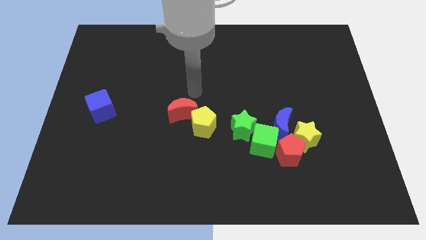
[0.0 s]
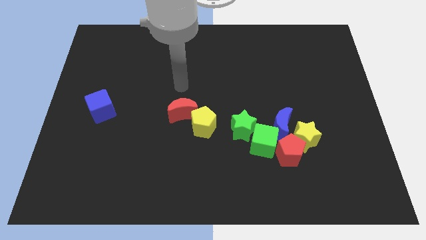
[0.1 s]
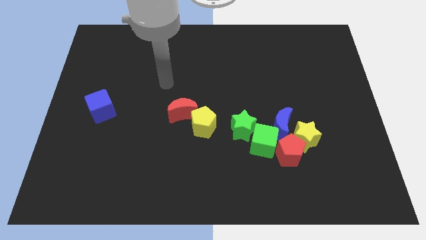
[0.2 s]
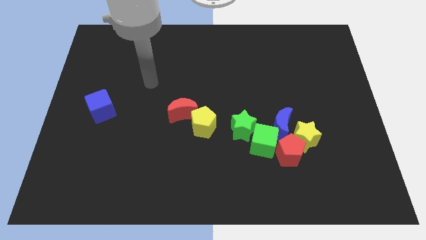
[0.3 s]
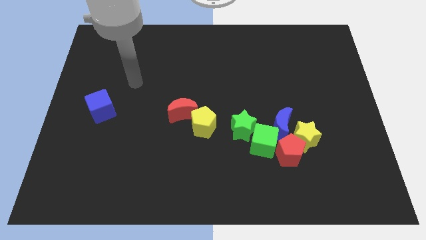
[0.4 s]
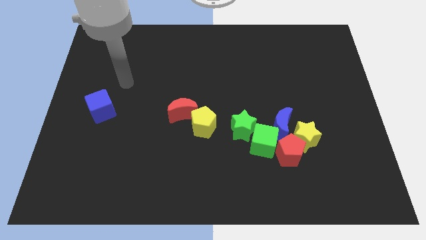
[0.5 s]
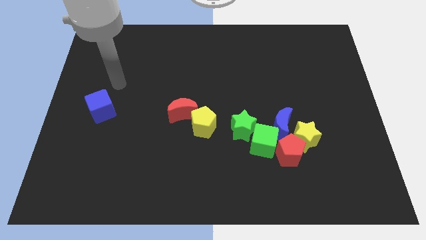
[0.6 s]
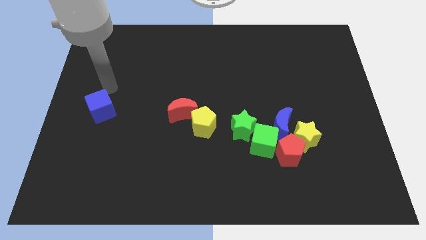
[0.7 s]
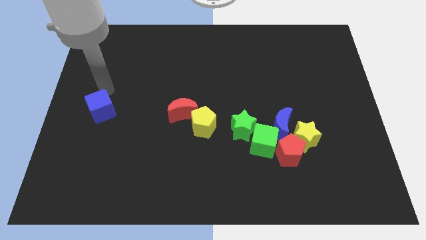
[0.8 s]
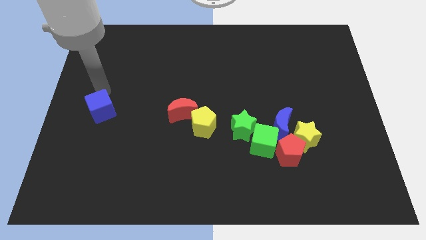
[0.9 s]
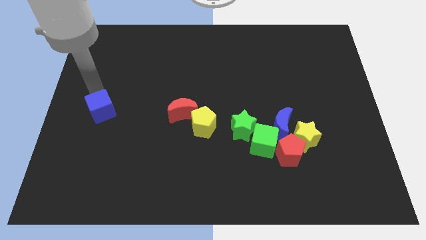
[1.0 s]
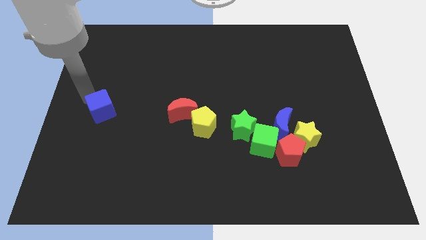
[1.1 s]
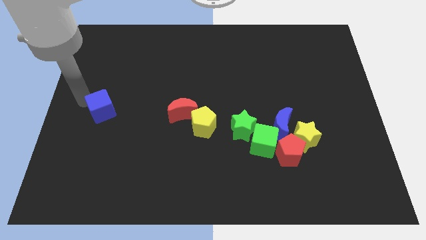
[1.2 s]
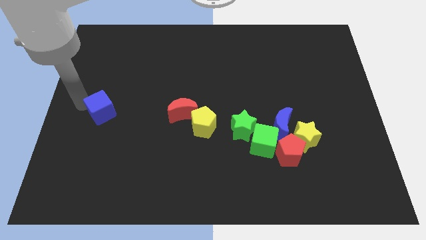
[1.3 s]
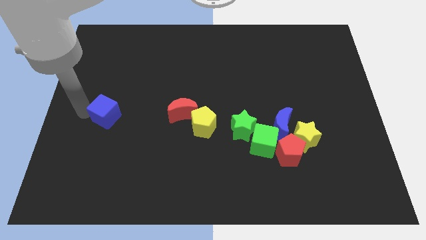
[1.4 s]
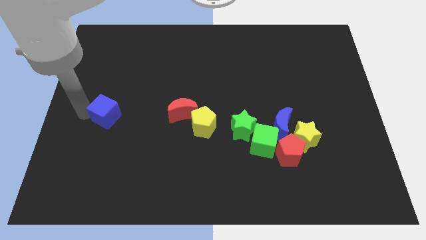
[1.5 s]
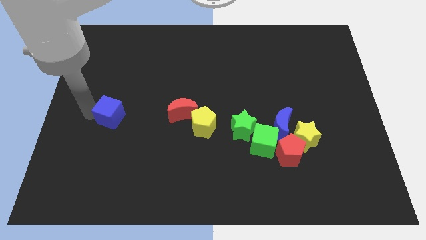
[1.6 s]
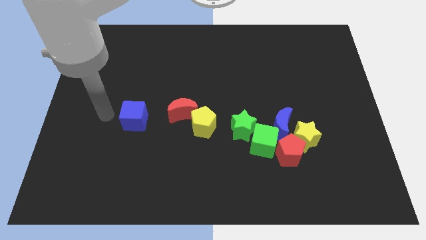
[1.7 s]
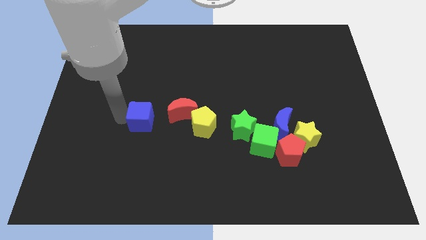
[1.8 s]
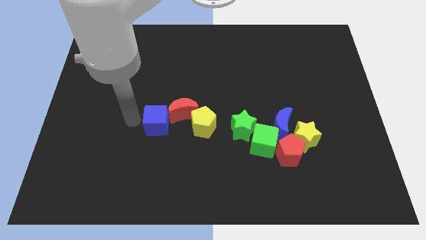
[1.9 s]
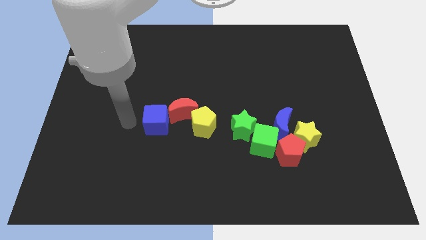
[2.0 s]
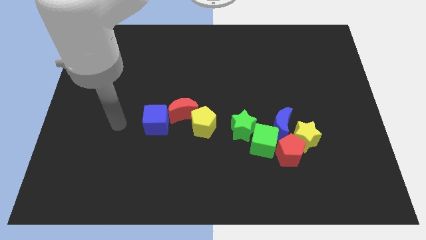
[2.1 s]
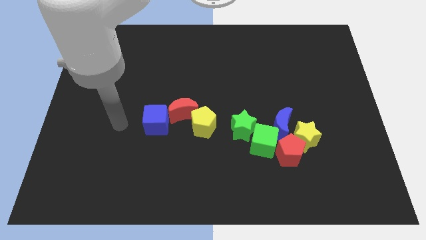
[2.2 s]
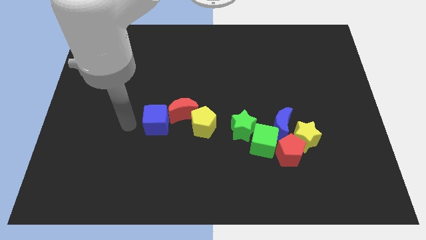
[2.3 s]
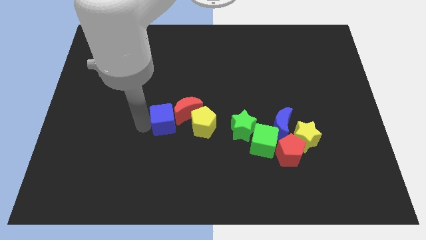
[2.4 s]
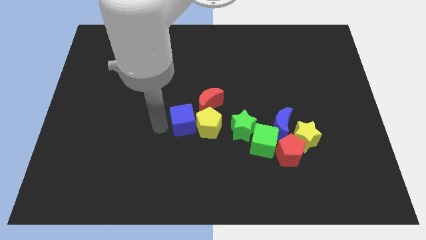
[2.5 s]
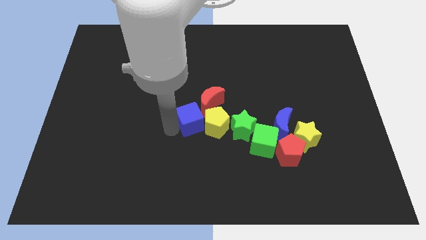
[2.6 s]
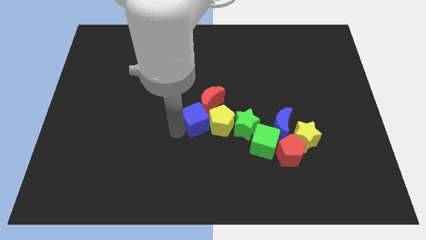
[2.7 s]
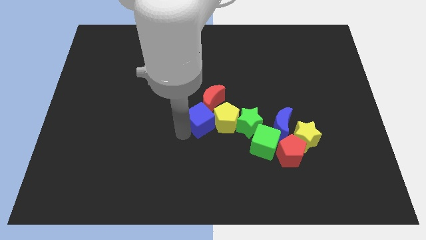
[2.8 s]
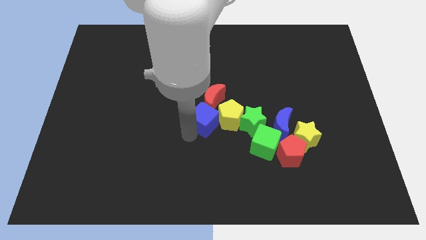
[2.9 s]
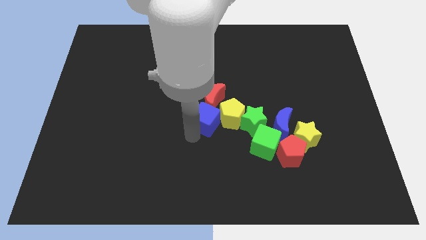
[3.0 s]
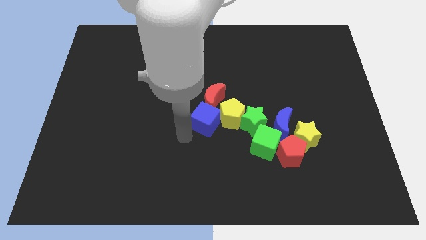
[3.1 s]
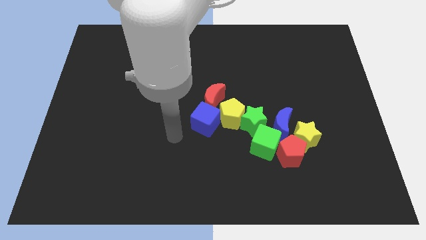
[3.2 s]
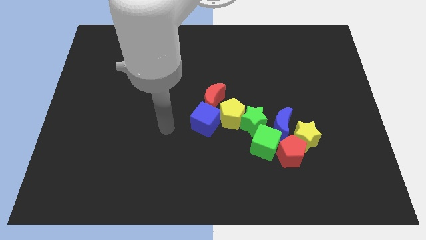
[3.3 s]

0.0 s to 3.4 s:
move the blue cube towards the centre of the board

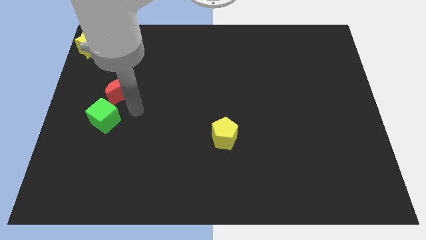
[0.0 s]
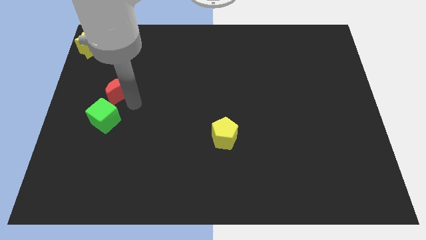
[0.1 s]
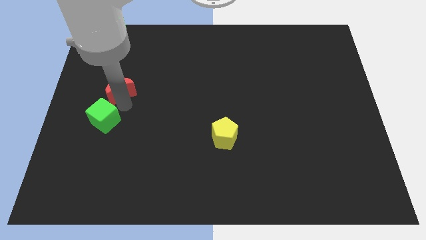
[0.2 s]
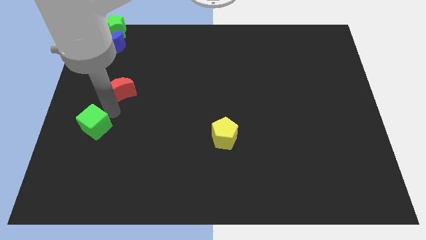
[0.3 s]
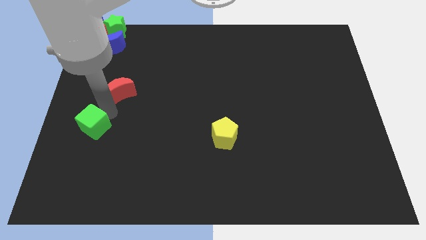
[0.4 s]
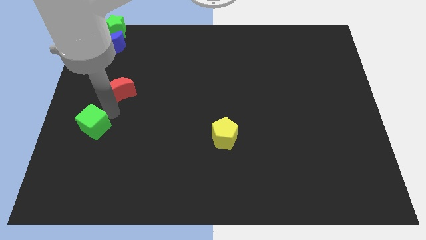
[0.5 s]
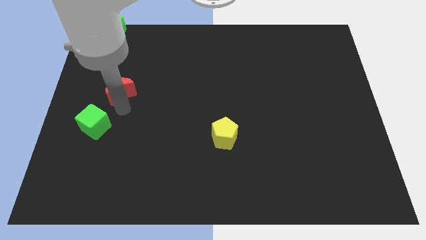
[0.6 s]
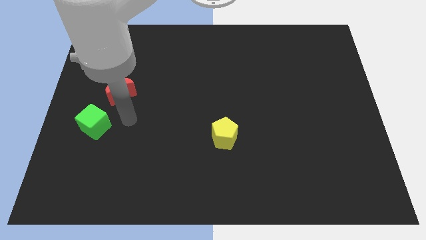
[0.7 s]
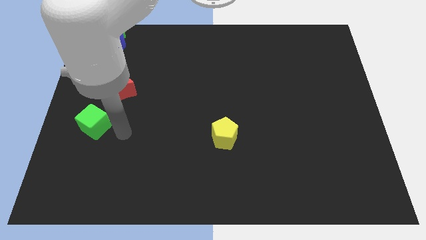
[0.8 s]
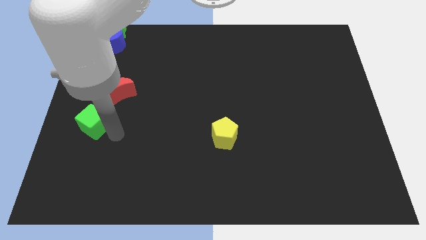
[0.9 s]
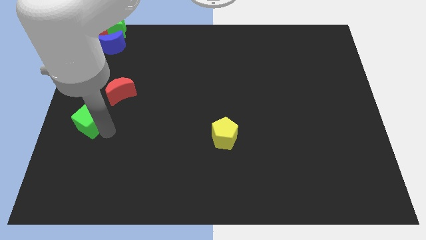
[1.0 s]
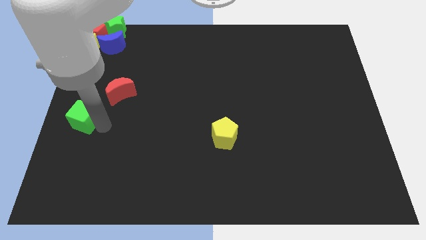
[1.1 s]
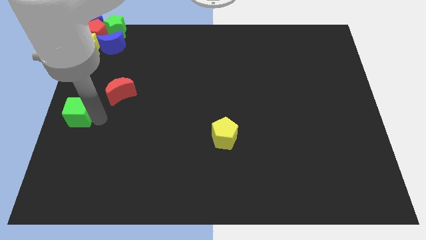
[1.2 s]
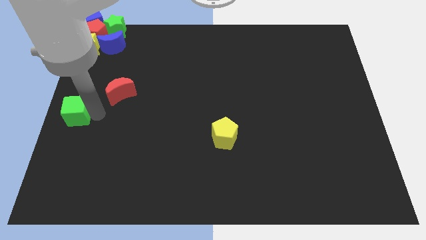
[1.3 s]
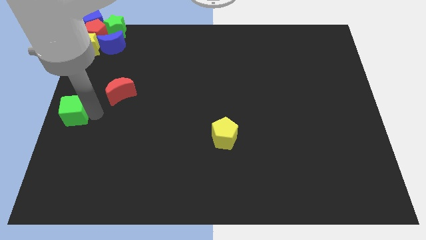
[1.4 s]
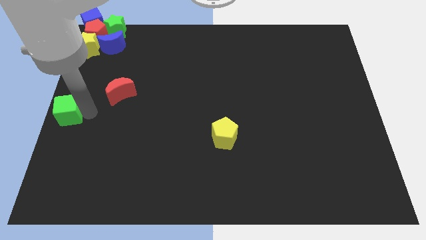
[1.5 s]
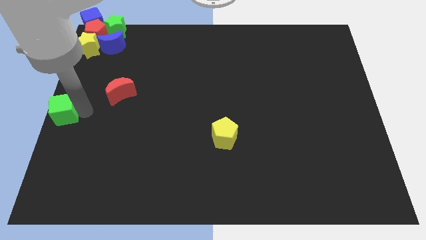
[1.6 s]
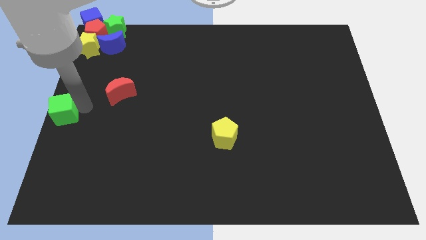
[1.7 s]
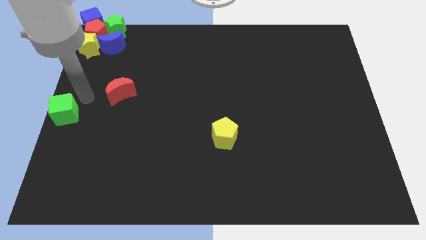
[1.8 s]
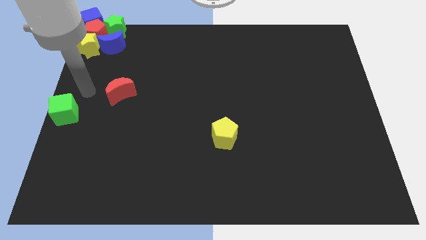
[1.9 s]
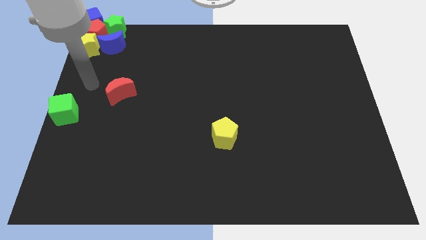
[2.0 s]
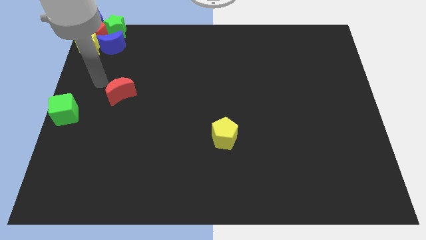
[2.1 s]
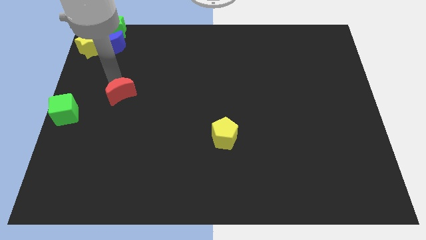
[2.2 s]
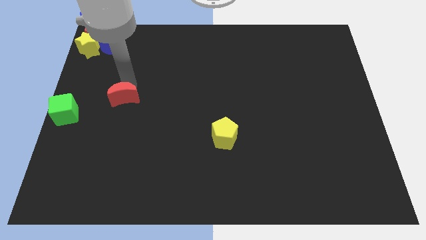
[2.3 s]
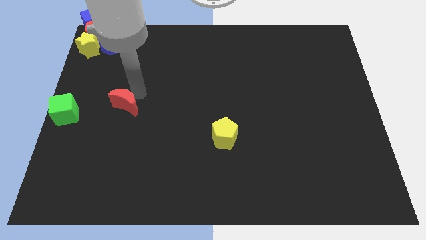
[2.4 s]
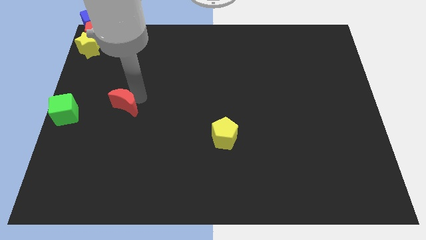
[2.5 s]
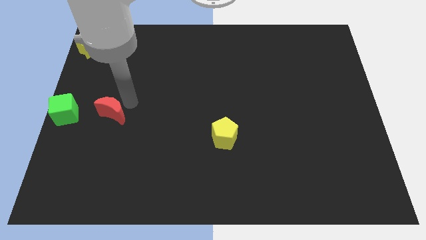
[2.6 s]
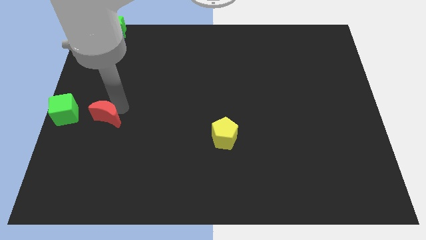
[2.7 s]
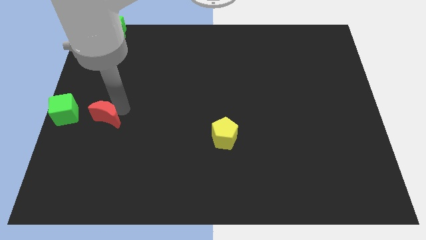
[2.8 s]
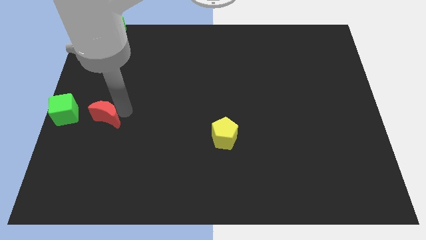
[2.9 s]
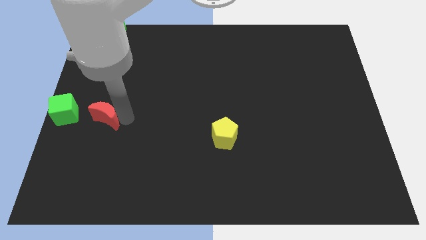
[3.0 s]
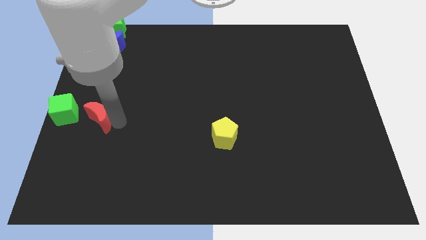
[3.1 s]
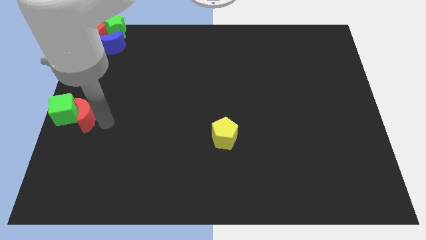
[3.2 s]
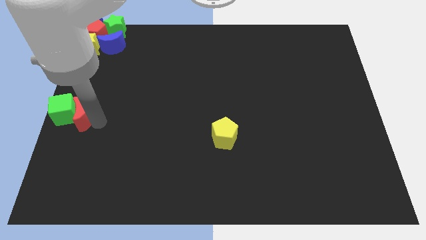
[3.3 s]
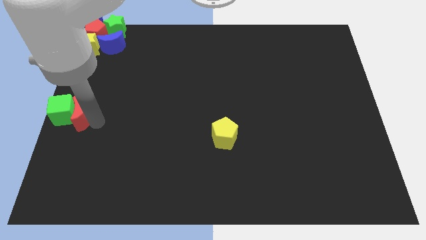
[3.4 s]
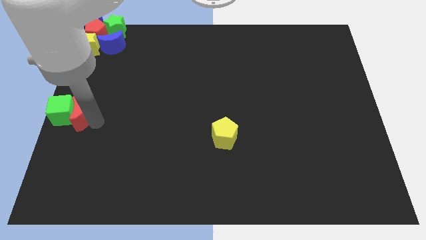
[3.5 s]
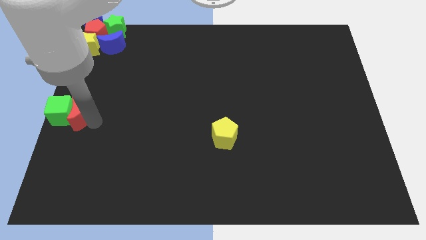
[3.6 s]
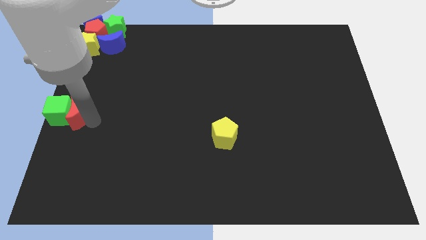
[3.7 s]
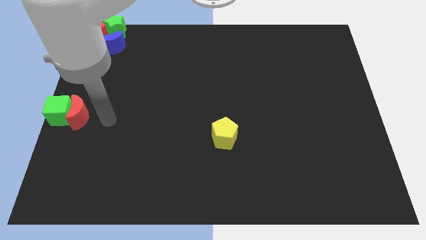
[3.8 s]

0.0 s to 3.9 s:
push the green cube towards the left side of the red crescent

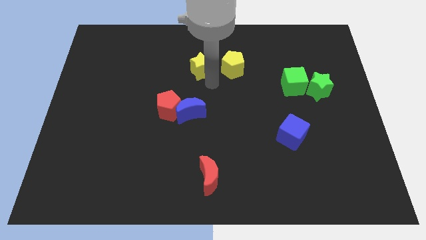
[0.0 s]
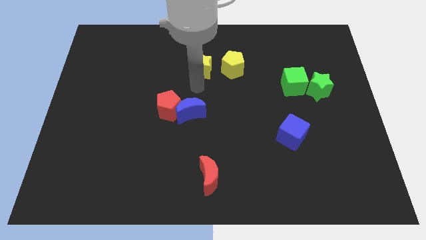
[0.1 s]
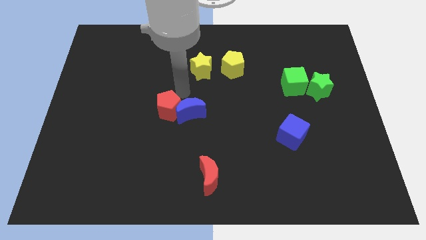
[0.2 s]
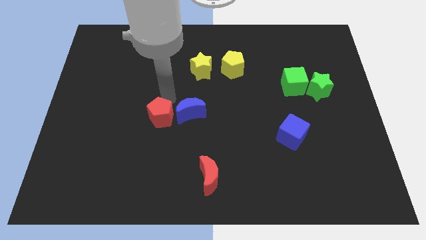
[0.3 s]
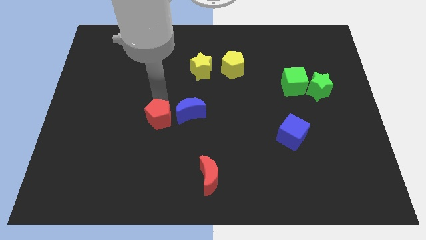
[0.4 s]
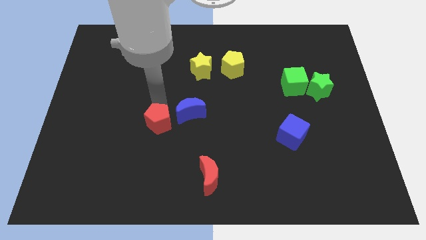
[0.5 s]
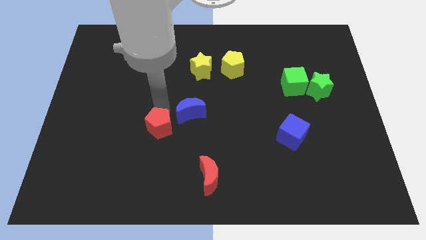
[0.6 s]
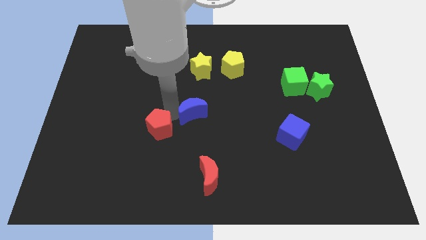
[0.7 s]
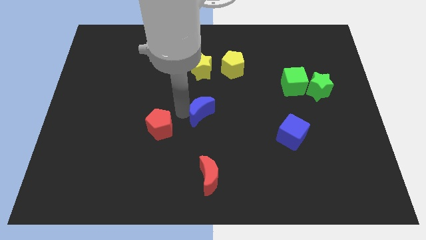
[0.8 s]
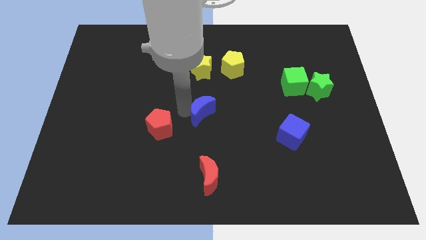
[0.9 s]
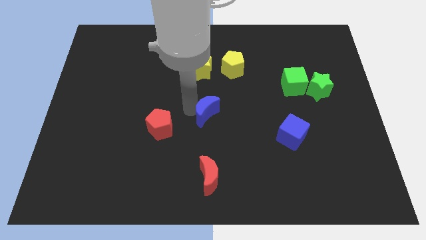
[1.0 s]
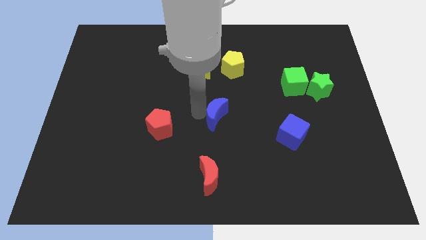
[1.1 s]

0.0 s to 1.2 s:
seperate blue moon and red pentagon

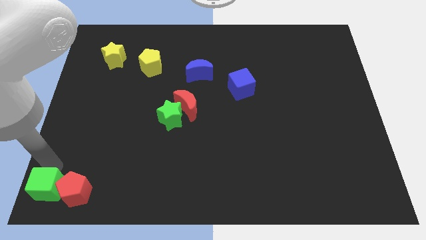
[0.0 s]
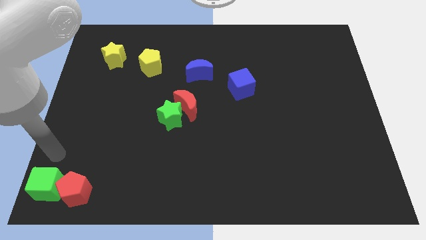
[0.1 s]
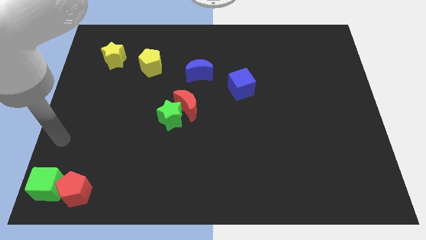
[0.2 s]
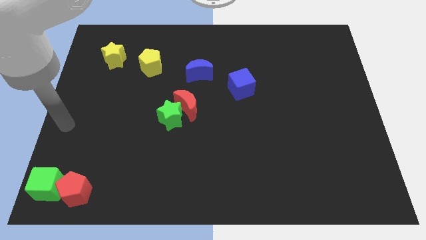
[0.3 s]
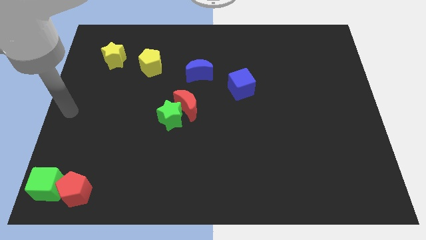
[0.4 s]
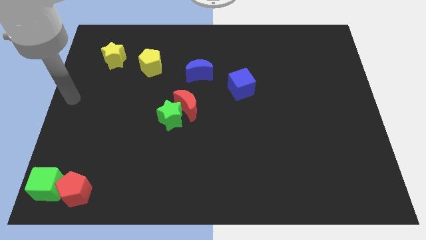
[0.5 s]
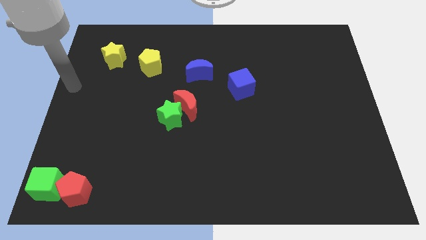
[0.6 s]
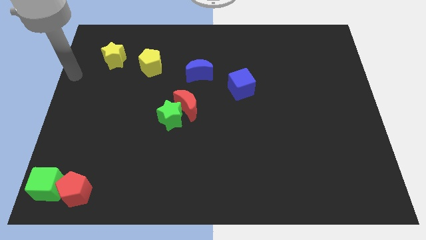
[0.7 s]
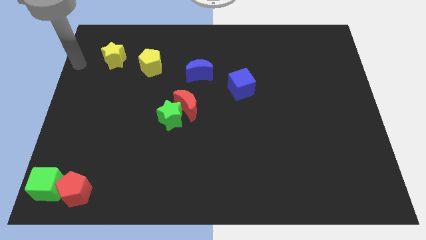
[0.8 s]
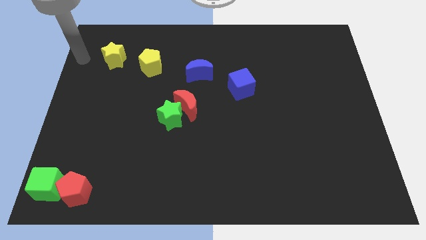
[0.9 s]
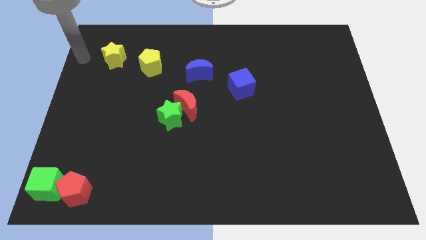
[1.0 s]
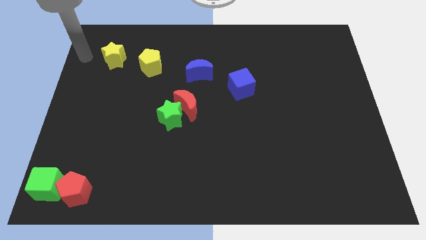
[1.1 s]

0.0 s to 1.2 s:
move your arm diagonal to the left of the yellow star
